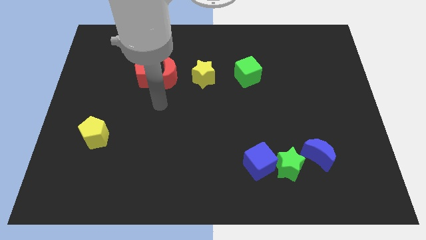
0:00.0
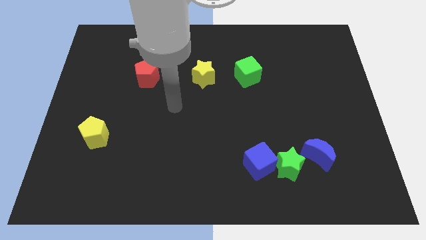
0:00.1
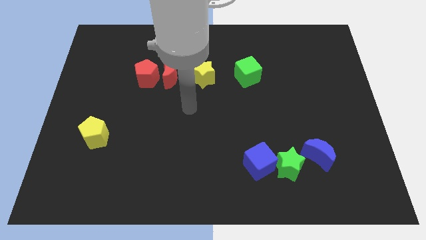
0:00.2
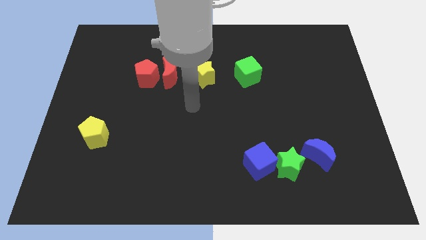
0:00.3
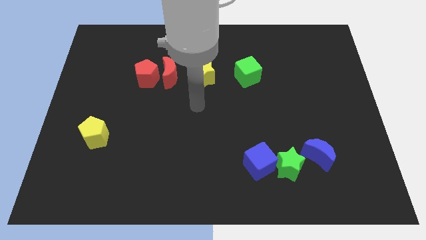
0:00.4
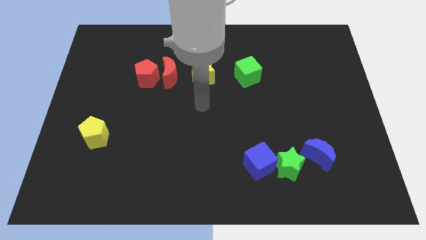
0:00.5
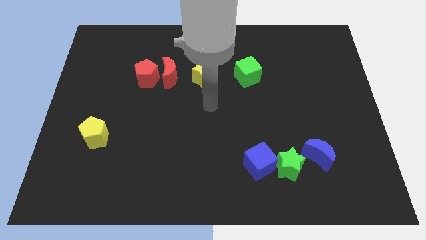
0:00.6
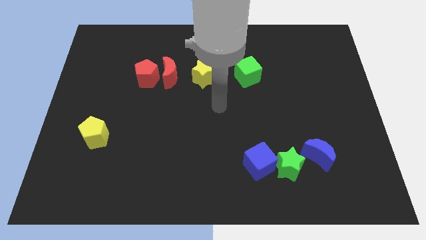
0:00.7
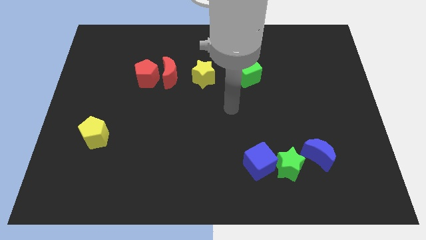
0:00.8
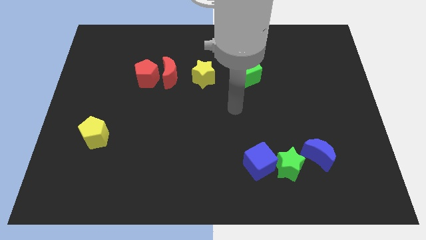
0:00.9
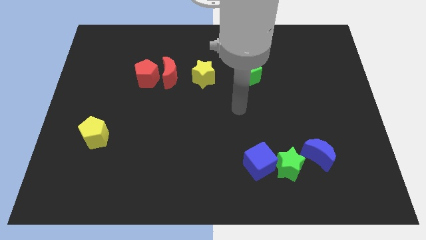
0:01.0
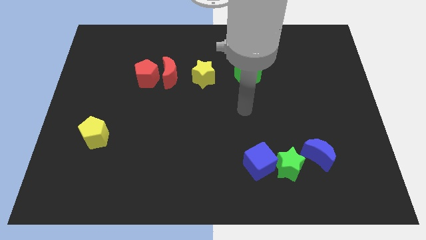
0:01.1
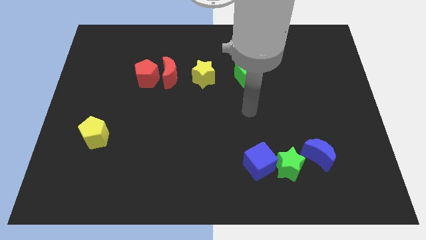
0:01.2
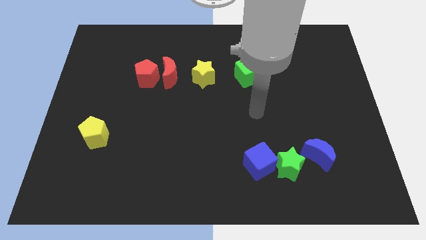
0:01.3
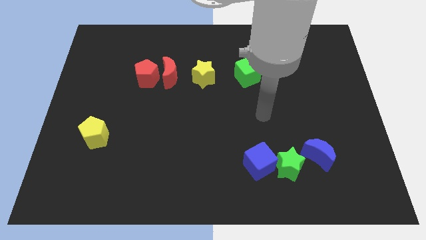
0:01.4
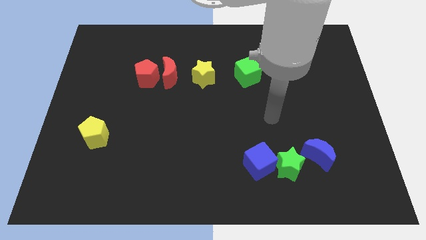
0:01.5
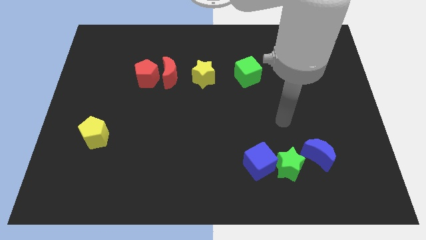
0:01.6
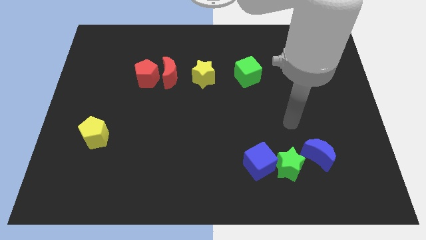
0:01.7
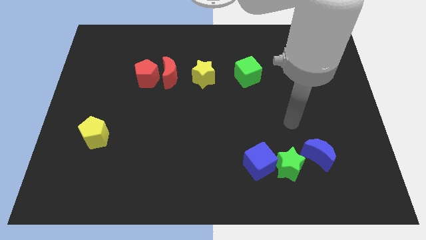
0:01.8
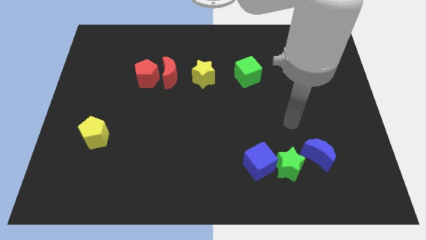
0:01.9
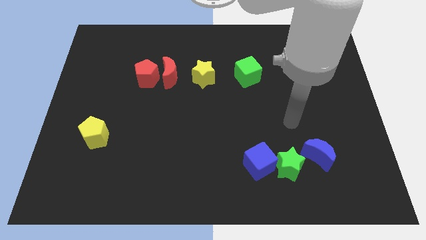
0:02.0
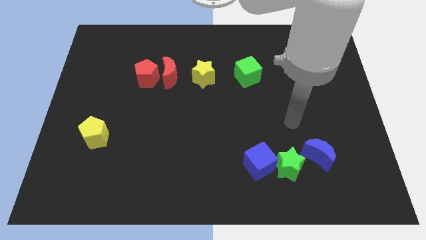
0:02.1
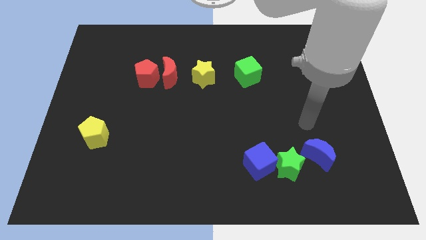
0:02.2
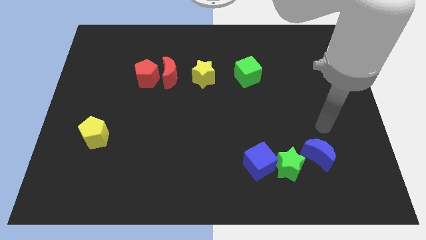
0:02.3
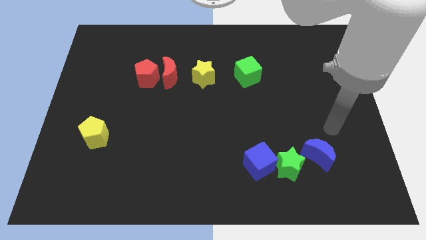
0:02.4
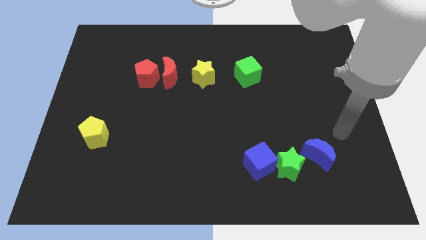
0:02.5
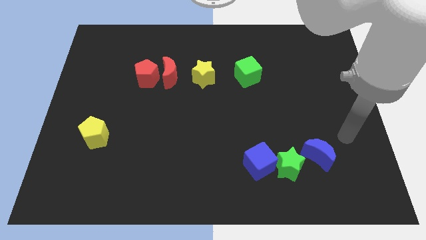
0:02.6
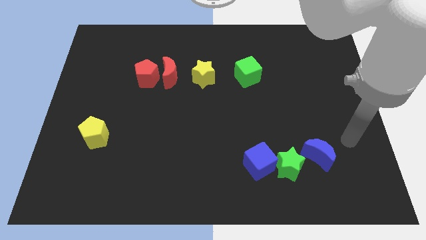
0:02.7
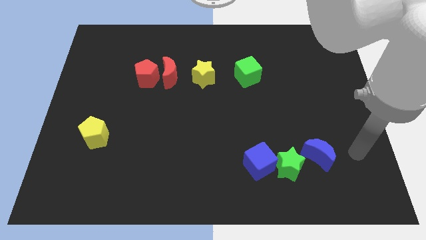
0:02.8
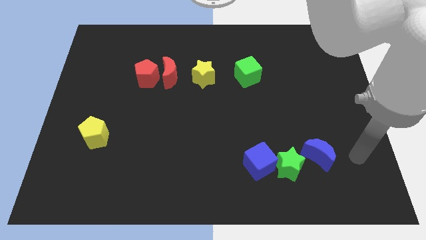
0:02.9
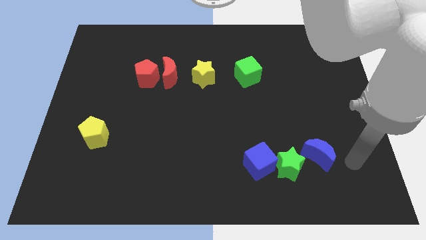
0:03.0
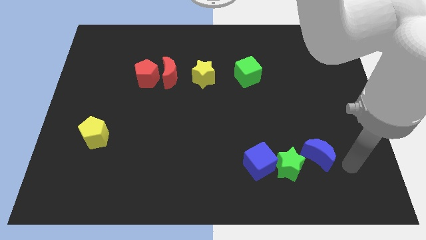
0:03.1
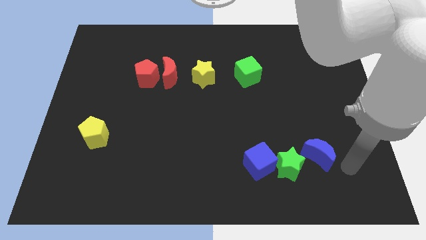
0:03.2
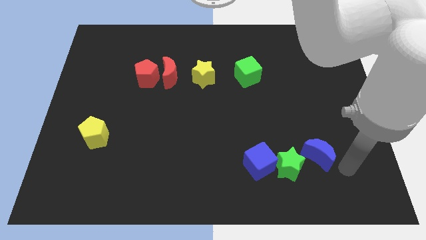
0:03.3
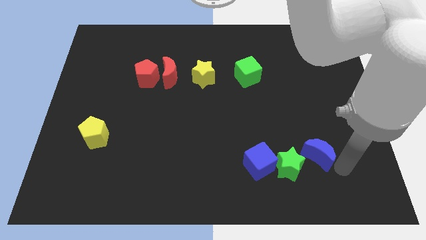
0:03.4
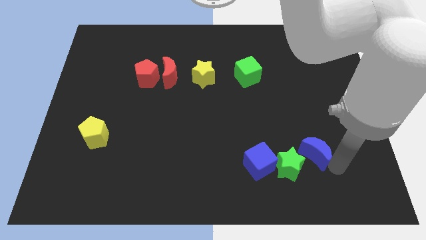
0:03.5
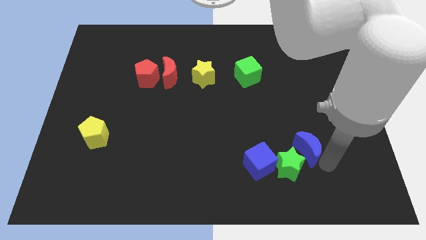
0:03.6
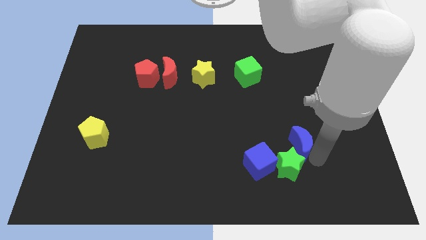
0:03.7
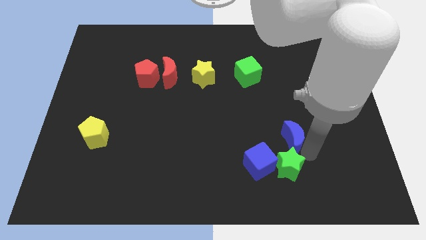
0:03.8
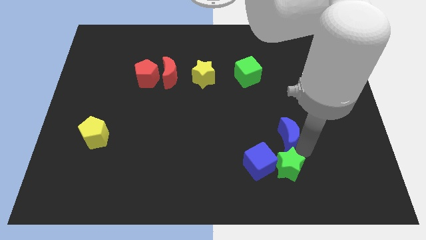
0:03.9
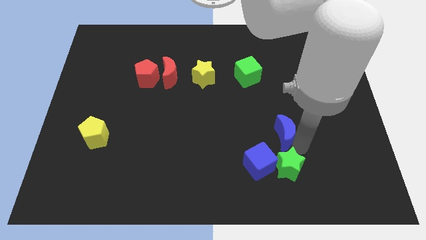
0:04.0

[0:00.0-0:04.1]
place the blue moon above the green star

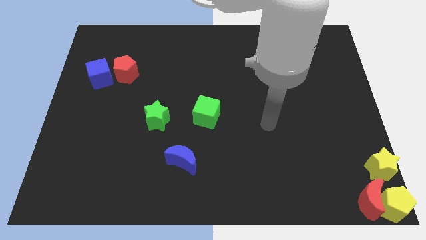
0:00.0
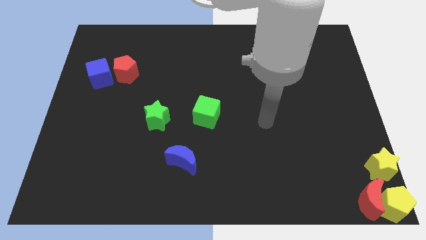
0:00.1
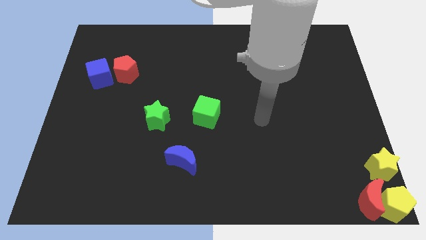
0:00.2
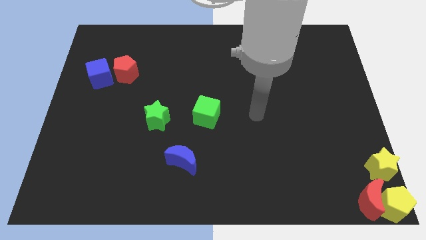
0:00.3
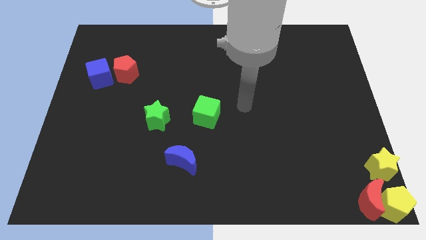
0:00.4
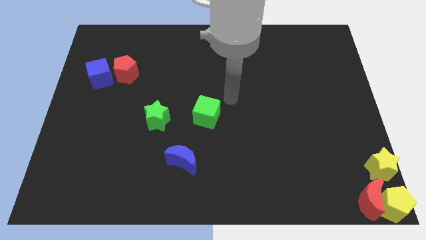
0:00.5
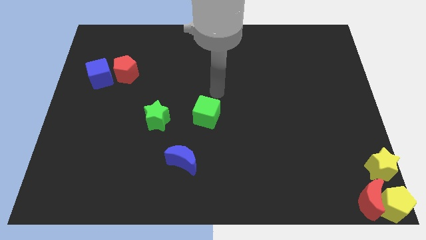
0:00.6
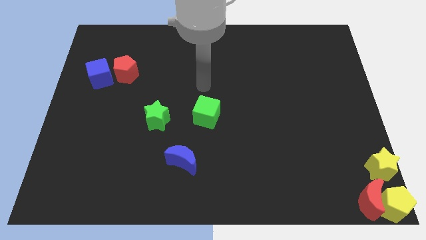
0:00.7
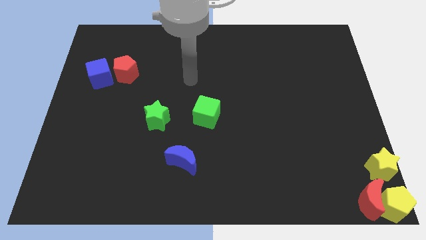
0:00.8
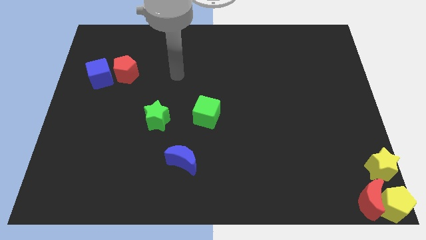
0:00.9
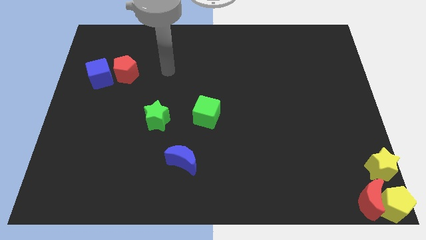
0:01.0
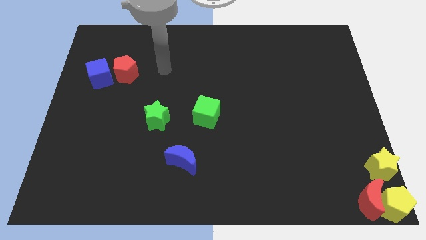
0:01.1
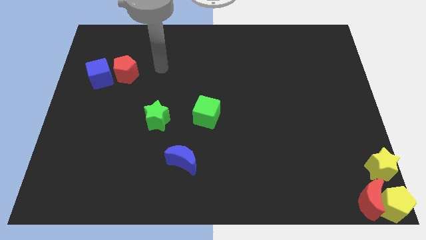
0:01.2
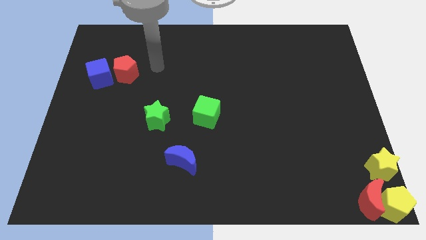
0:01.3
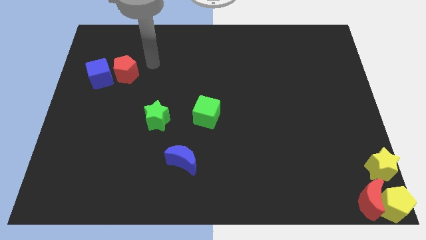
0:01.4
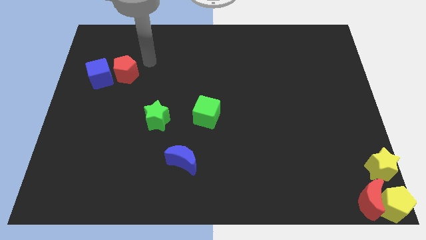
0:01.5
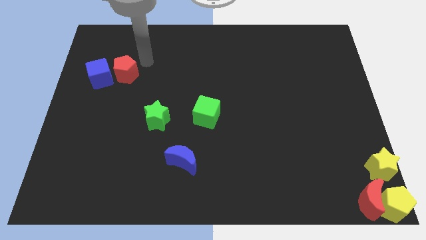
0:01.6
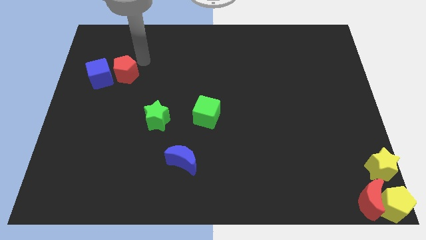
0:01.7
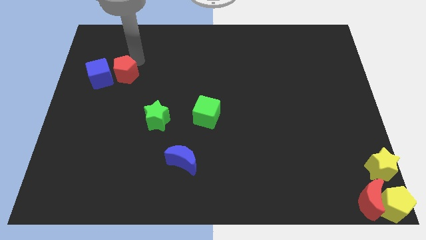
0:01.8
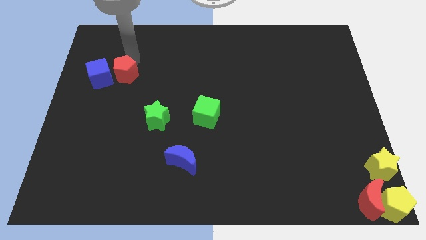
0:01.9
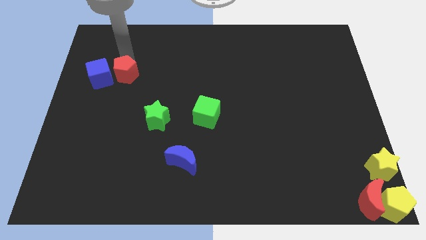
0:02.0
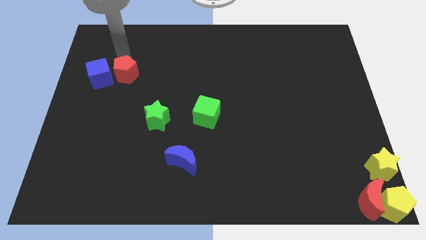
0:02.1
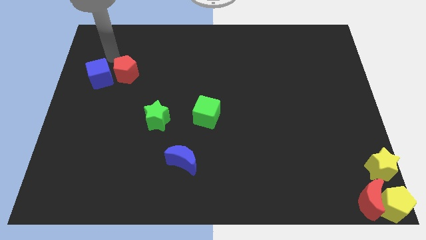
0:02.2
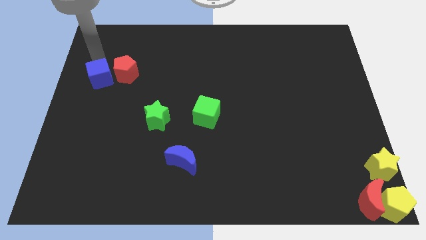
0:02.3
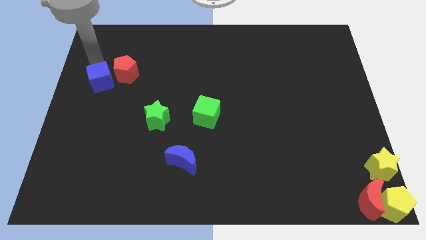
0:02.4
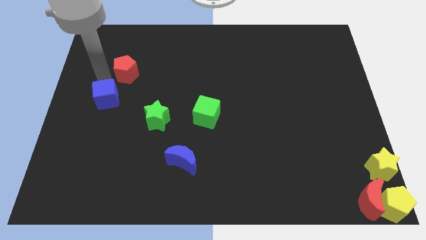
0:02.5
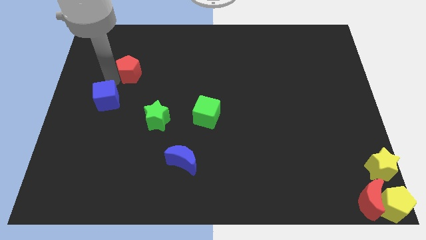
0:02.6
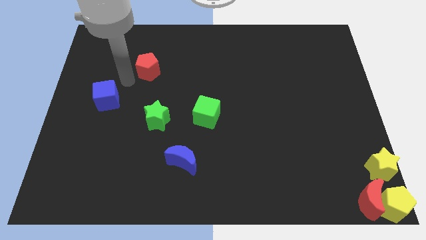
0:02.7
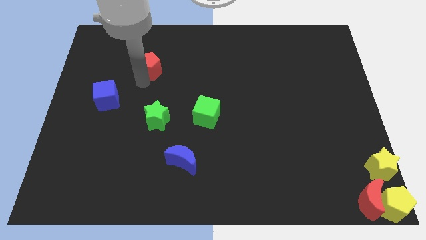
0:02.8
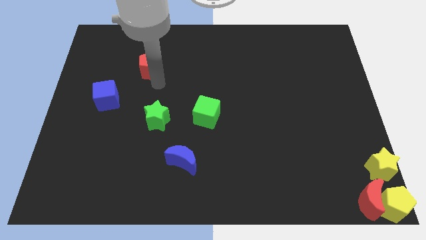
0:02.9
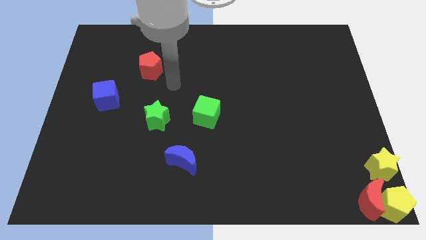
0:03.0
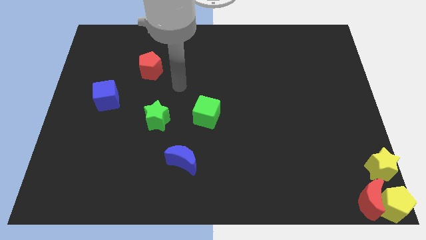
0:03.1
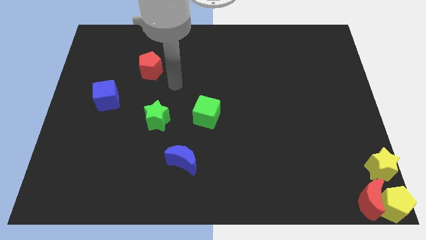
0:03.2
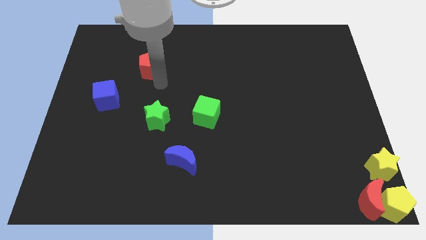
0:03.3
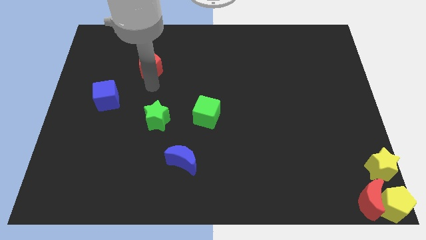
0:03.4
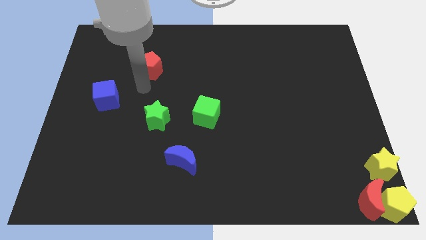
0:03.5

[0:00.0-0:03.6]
separate the blue cube from the red pentagon from the top

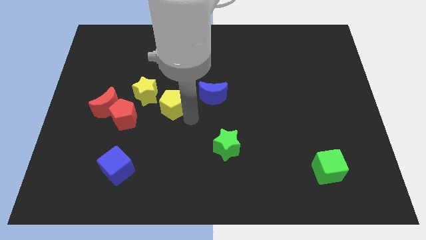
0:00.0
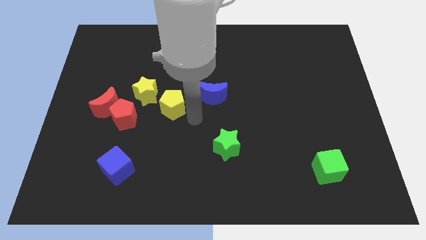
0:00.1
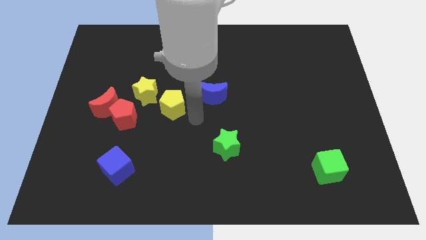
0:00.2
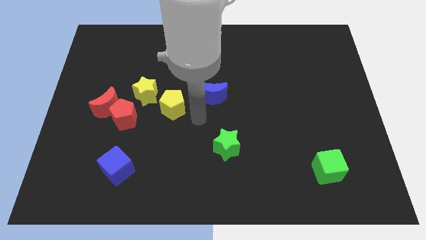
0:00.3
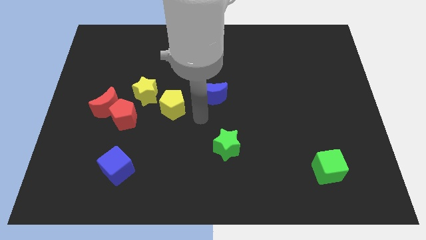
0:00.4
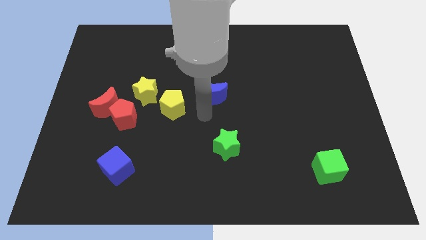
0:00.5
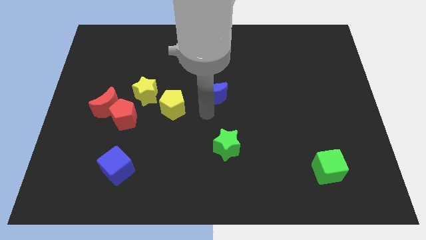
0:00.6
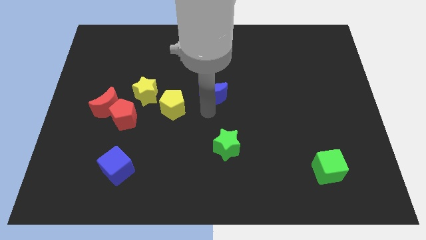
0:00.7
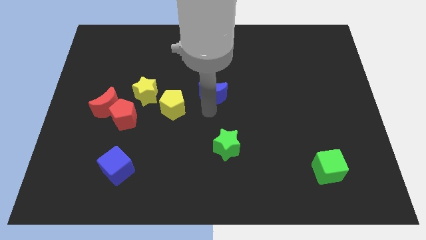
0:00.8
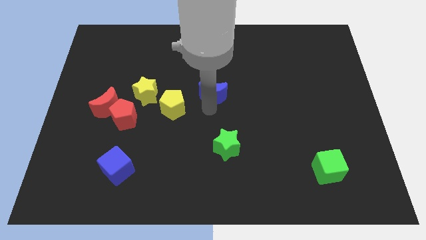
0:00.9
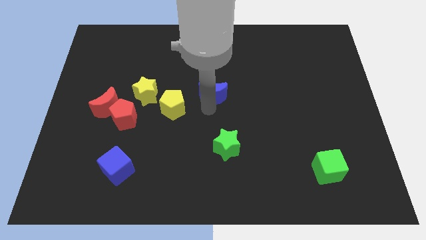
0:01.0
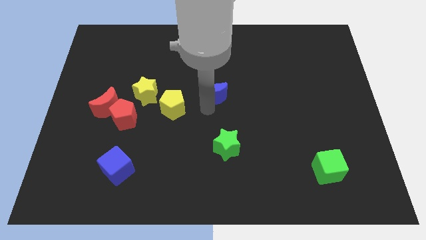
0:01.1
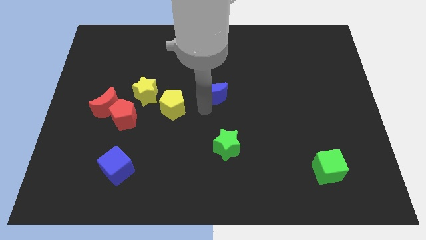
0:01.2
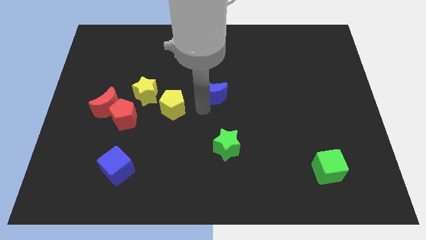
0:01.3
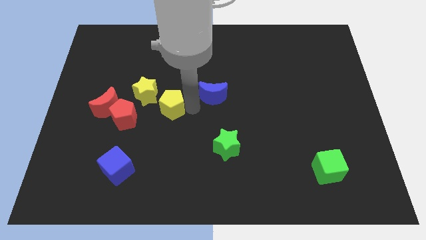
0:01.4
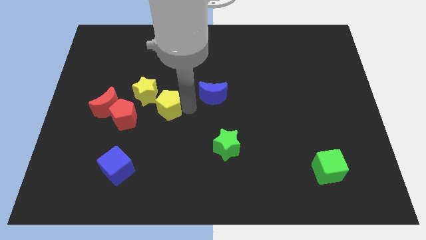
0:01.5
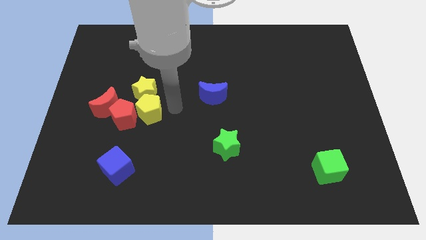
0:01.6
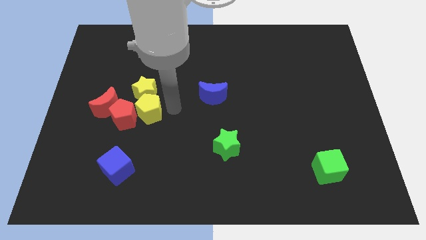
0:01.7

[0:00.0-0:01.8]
push yellow pentagon towards red pentagon
